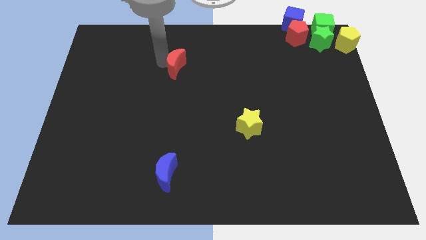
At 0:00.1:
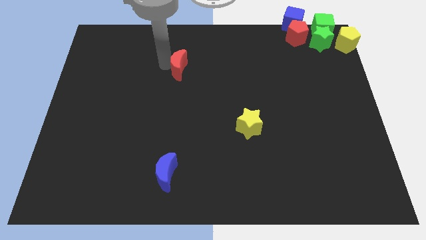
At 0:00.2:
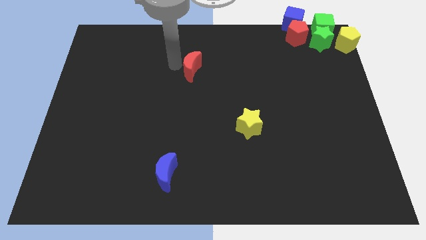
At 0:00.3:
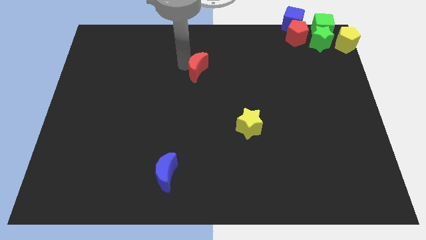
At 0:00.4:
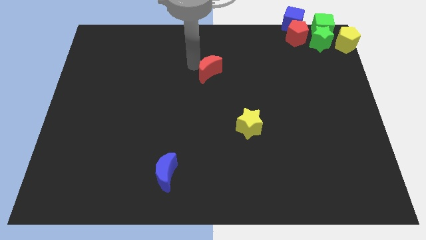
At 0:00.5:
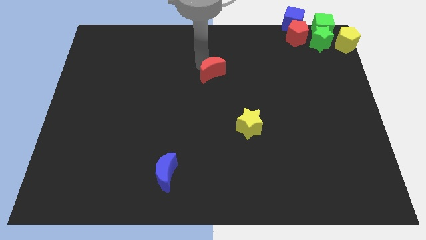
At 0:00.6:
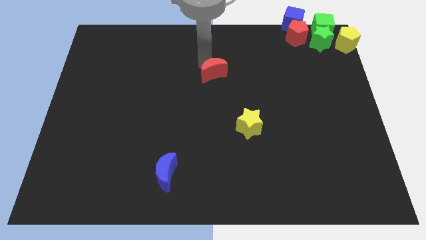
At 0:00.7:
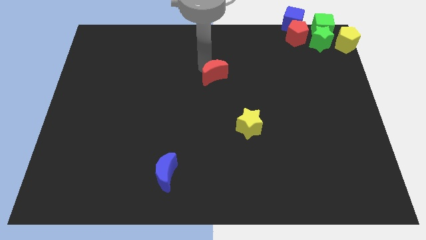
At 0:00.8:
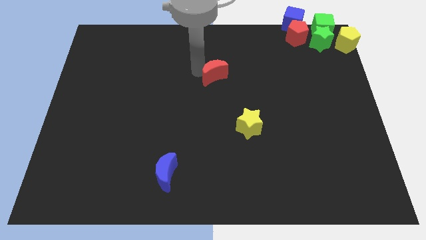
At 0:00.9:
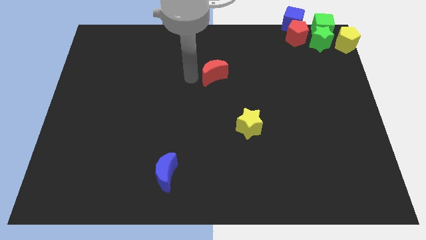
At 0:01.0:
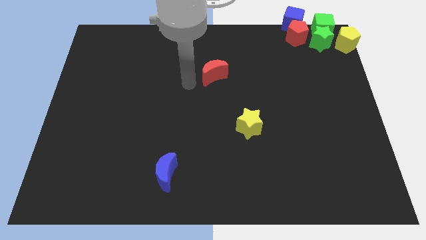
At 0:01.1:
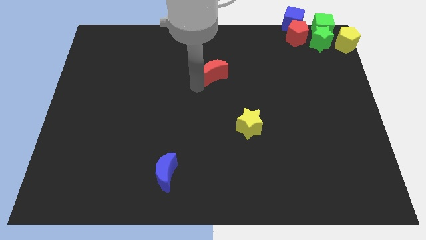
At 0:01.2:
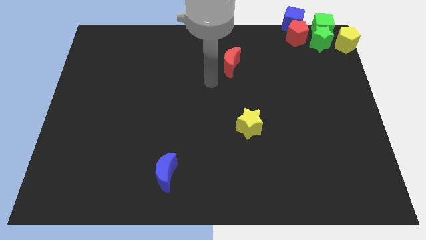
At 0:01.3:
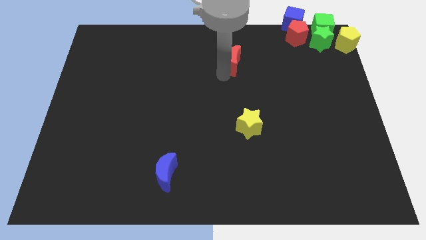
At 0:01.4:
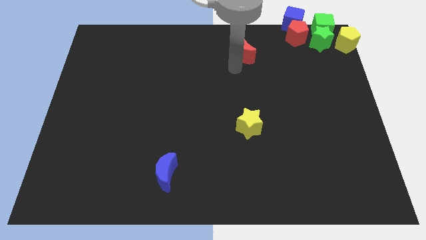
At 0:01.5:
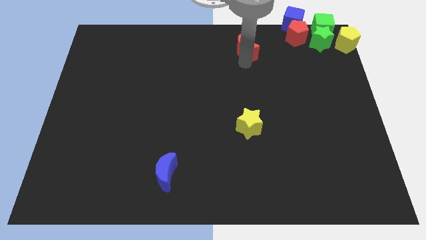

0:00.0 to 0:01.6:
place the red moon vertically to the top side of the yellow star

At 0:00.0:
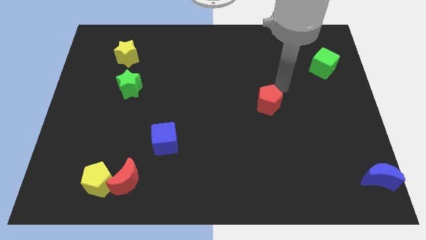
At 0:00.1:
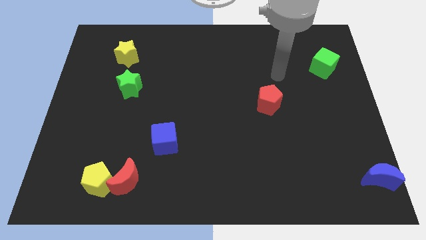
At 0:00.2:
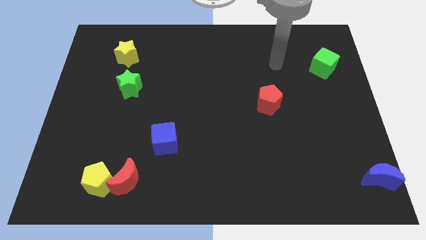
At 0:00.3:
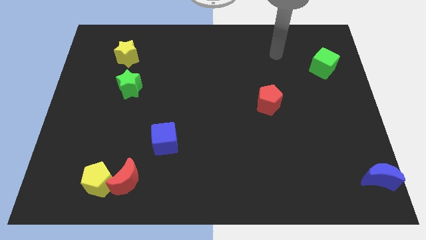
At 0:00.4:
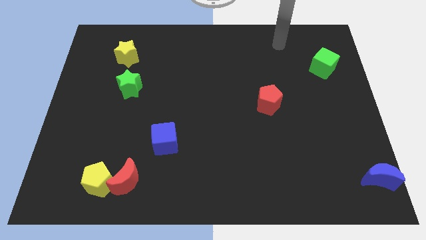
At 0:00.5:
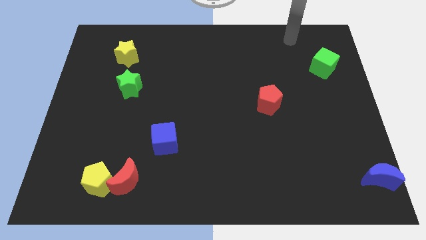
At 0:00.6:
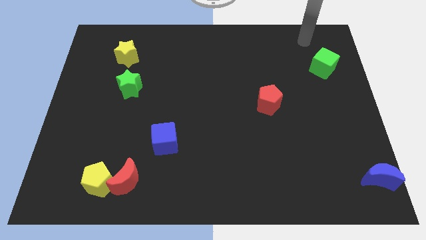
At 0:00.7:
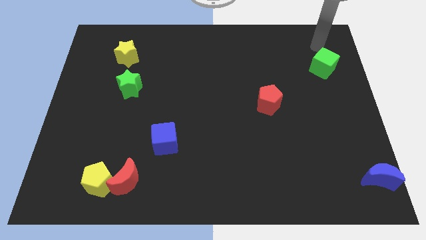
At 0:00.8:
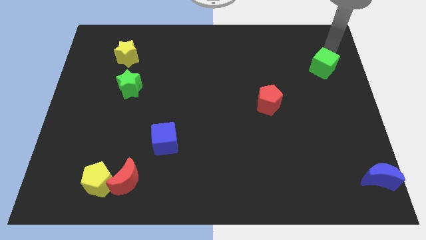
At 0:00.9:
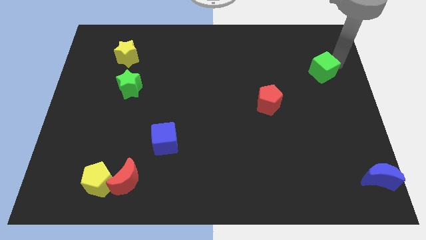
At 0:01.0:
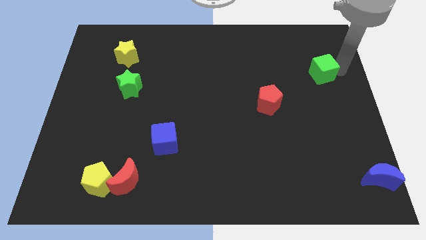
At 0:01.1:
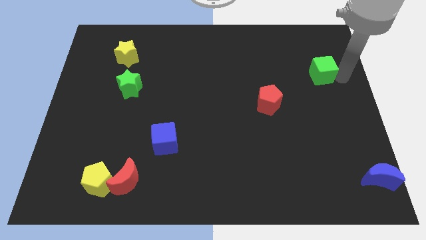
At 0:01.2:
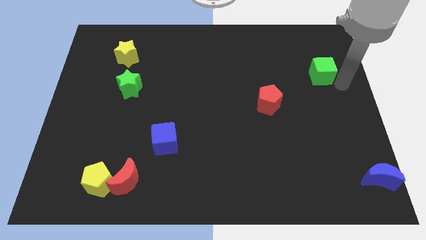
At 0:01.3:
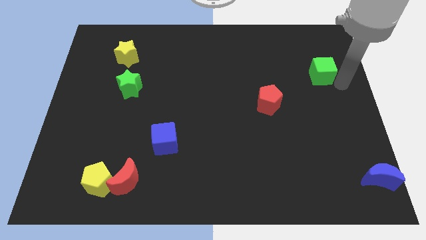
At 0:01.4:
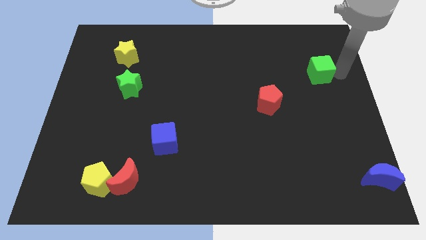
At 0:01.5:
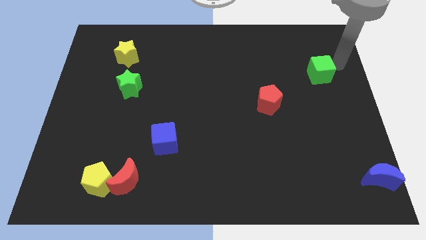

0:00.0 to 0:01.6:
place your arm above the green cube

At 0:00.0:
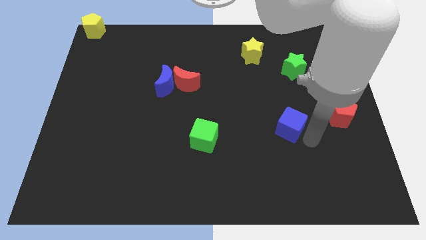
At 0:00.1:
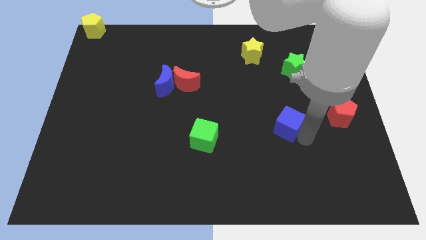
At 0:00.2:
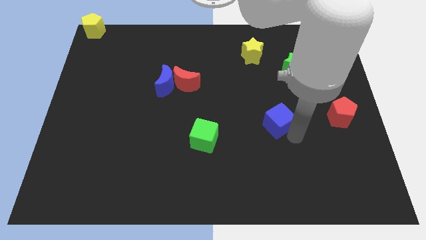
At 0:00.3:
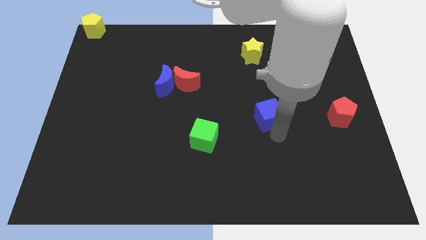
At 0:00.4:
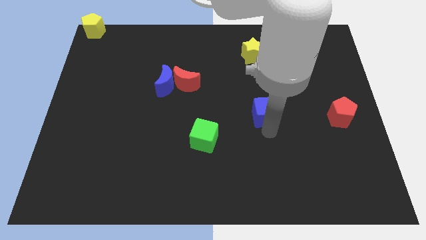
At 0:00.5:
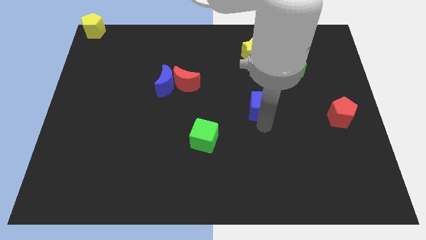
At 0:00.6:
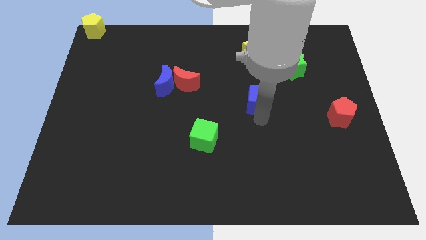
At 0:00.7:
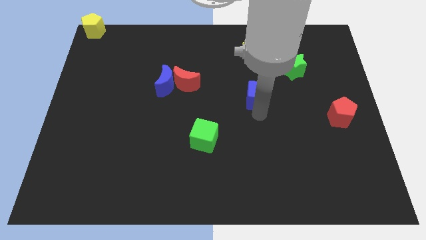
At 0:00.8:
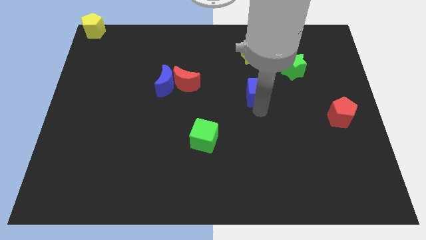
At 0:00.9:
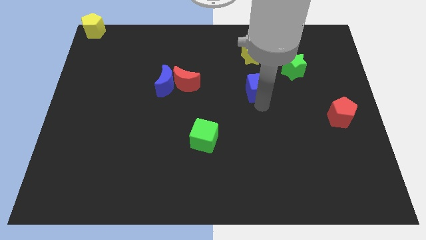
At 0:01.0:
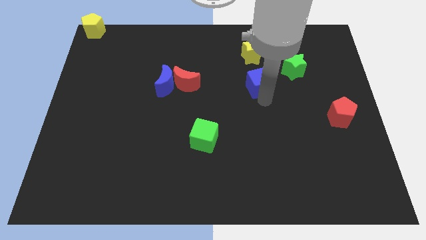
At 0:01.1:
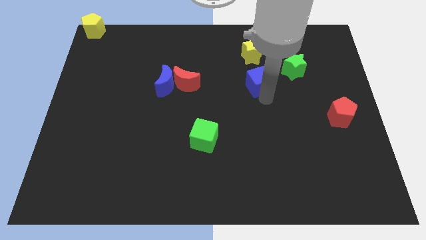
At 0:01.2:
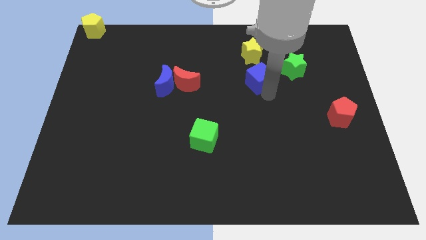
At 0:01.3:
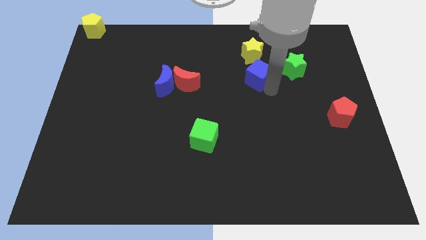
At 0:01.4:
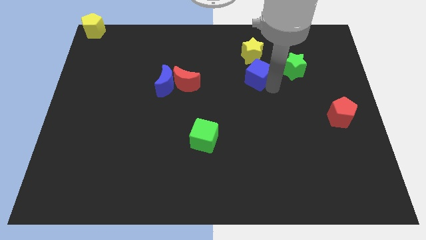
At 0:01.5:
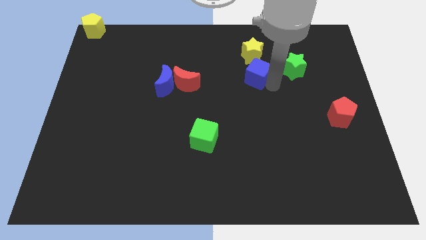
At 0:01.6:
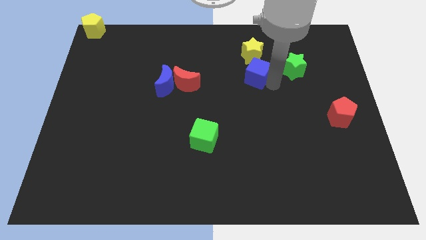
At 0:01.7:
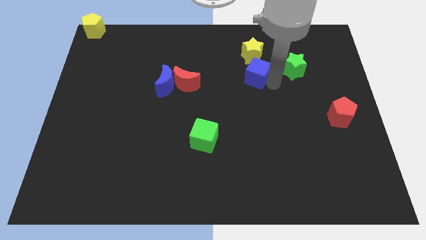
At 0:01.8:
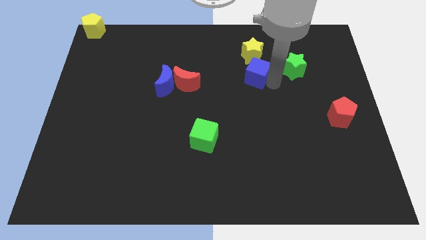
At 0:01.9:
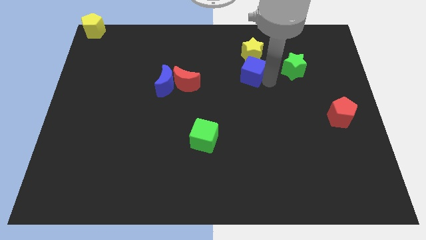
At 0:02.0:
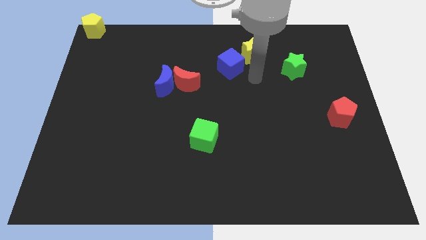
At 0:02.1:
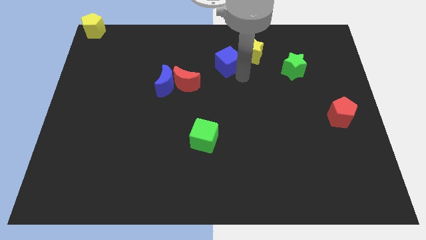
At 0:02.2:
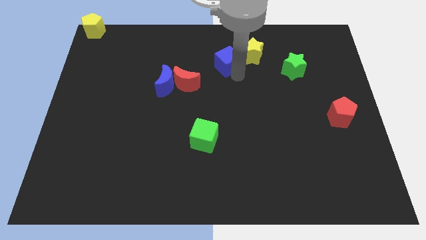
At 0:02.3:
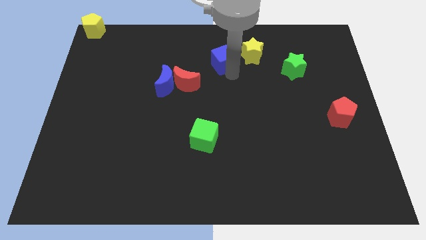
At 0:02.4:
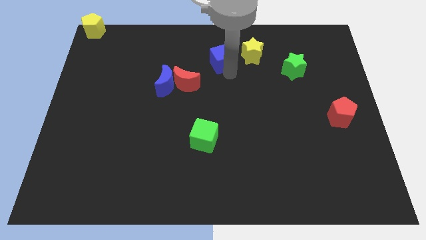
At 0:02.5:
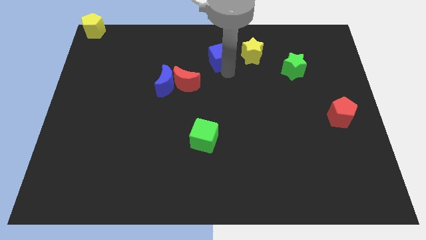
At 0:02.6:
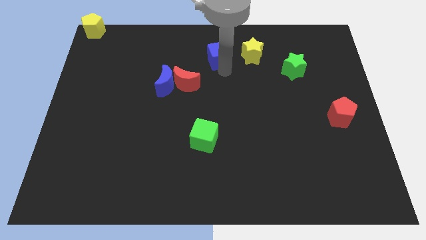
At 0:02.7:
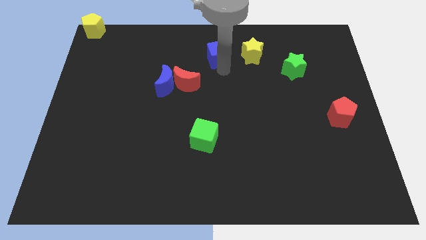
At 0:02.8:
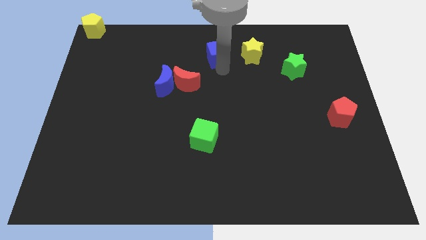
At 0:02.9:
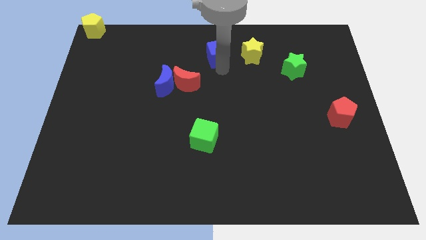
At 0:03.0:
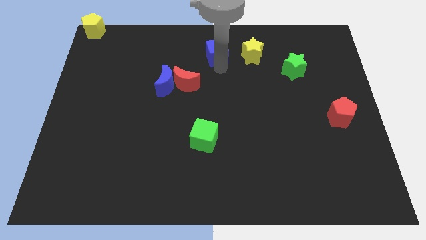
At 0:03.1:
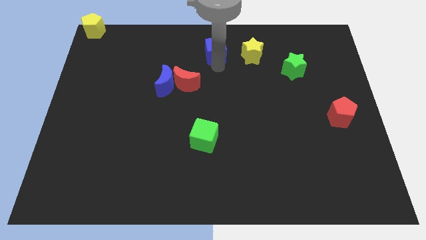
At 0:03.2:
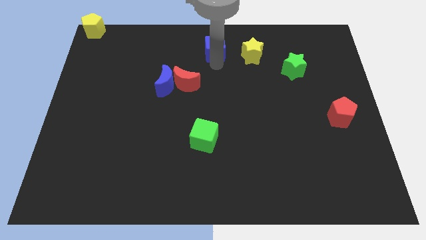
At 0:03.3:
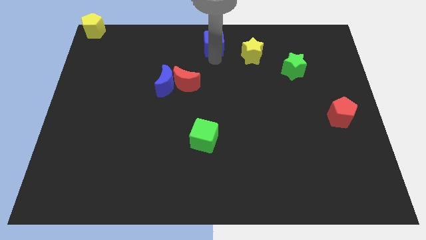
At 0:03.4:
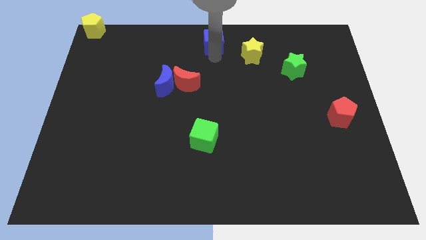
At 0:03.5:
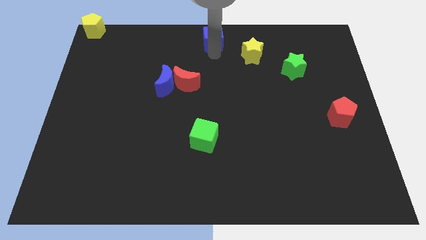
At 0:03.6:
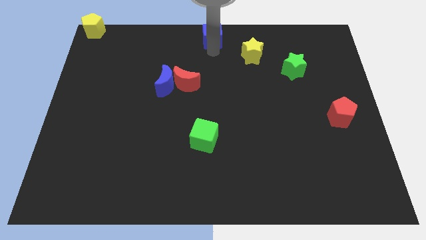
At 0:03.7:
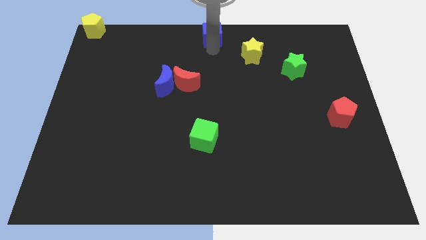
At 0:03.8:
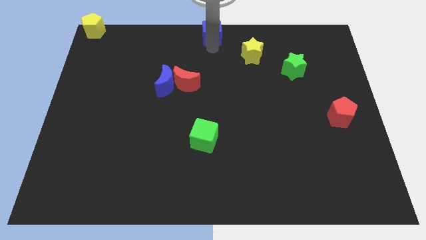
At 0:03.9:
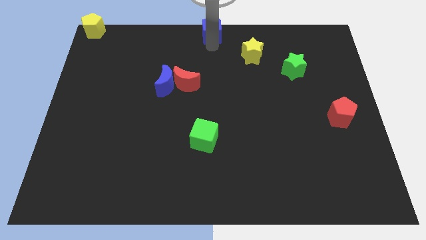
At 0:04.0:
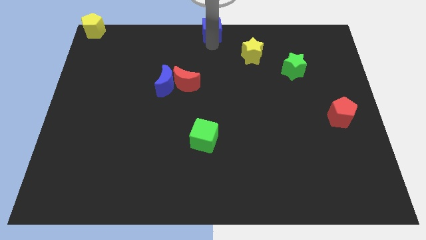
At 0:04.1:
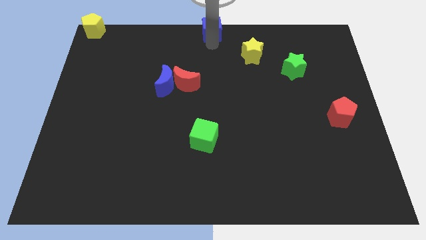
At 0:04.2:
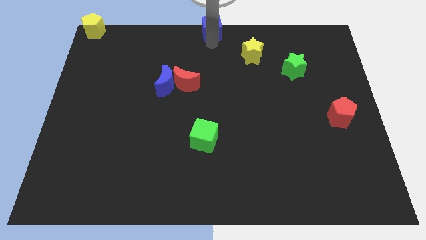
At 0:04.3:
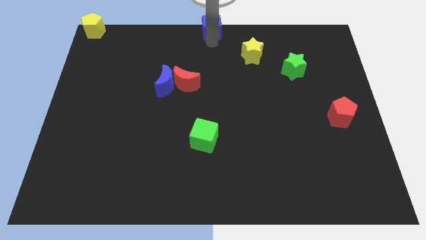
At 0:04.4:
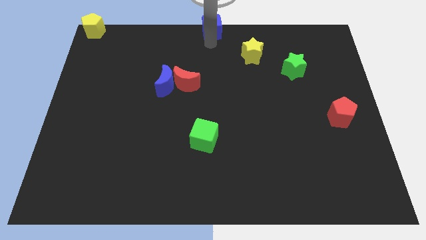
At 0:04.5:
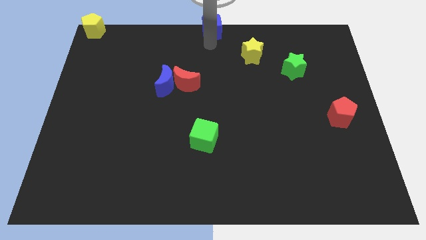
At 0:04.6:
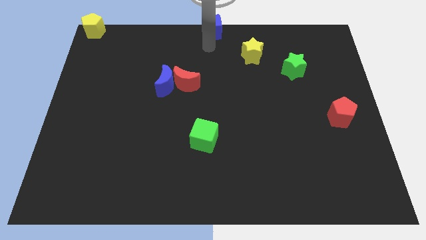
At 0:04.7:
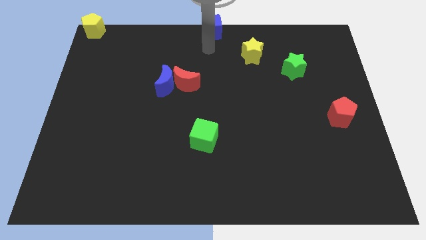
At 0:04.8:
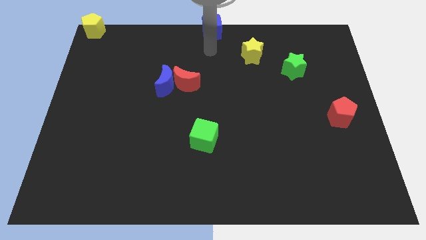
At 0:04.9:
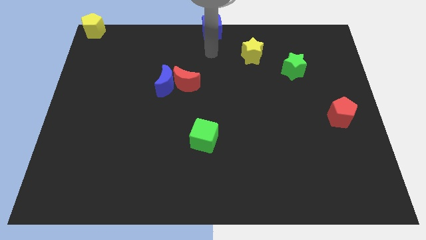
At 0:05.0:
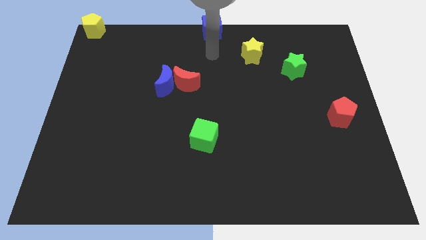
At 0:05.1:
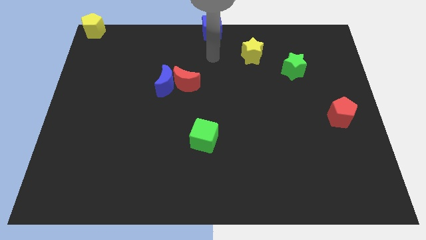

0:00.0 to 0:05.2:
place the blue cube on the top middle of the board

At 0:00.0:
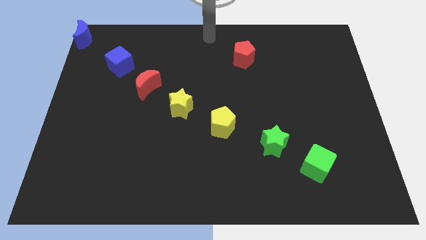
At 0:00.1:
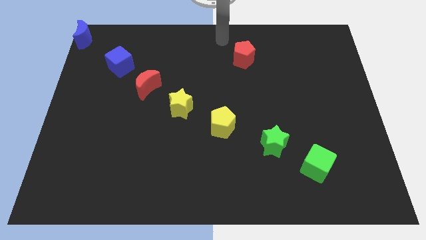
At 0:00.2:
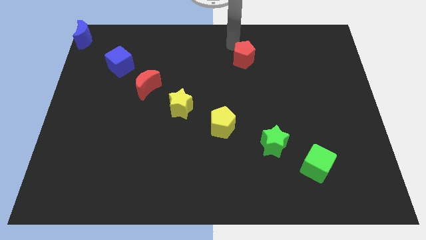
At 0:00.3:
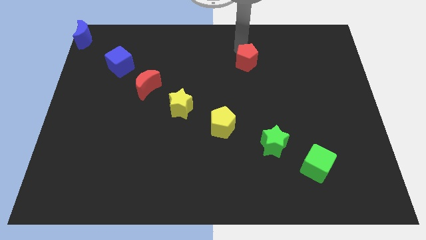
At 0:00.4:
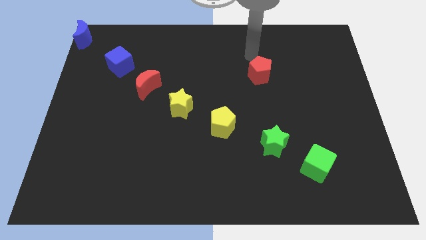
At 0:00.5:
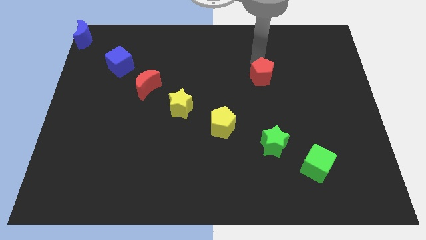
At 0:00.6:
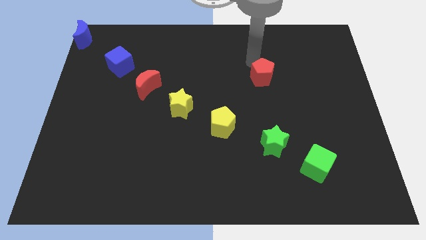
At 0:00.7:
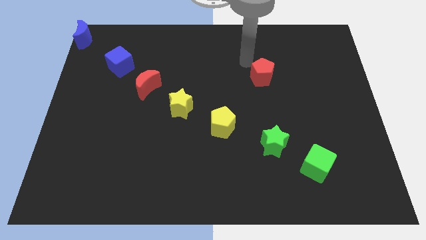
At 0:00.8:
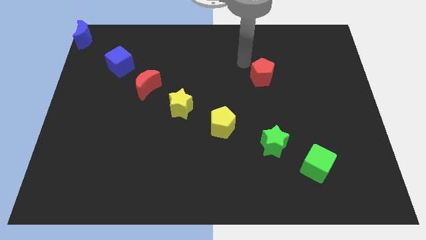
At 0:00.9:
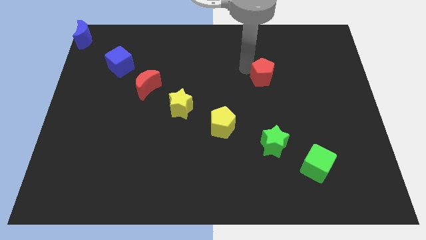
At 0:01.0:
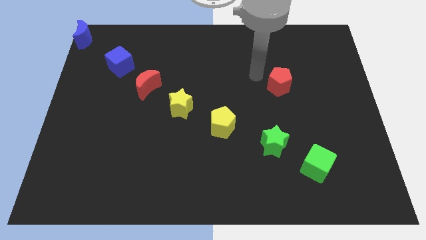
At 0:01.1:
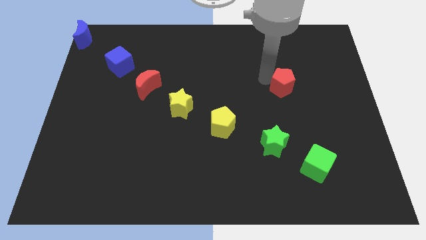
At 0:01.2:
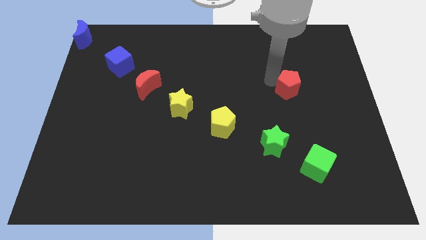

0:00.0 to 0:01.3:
place the red pentagon above the green star
